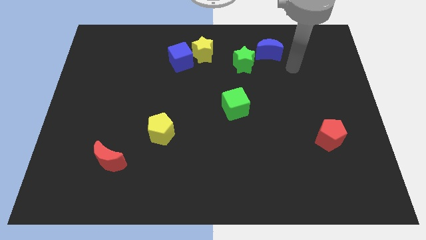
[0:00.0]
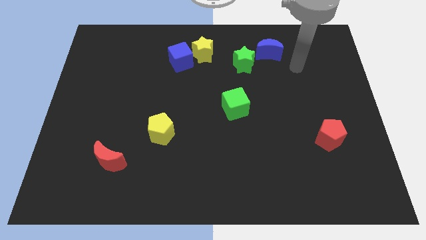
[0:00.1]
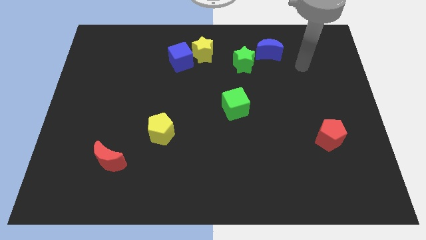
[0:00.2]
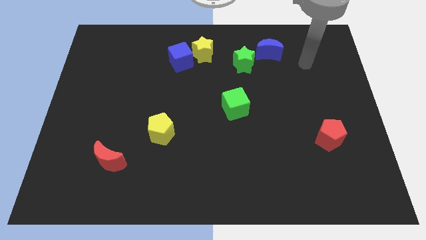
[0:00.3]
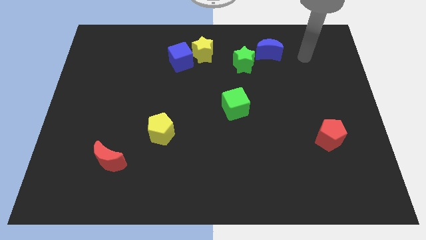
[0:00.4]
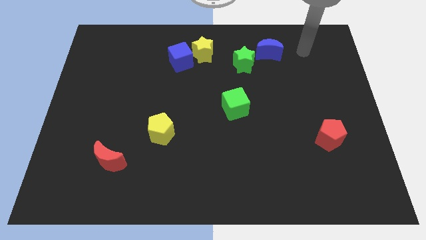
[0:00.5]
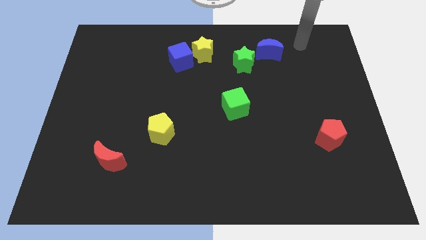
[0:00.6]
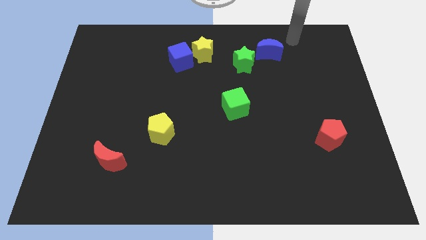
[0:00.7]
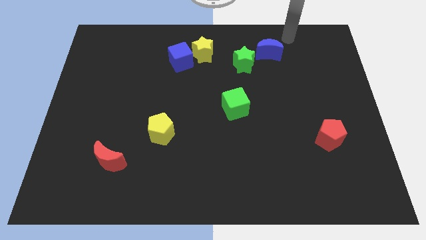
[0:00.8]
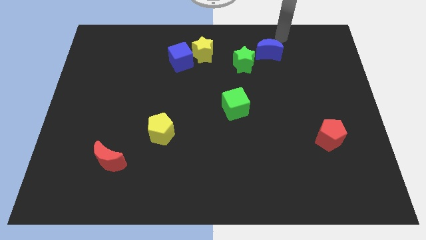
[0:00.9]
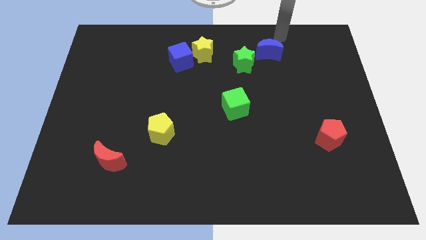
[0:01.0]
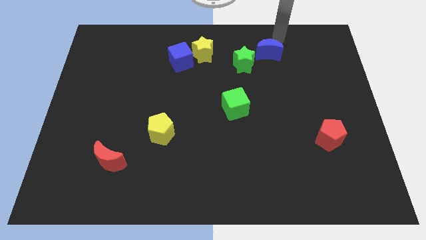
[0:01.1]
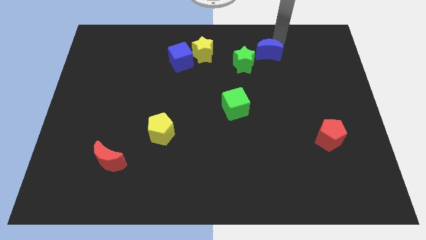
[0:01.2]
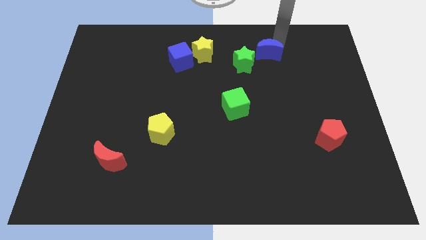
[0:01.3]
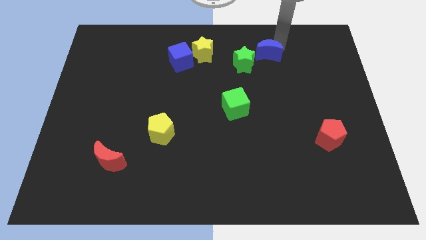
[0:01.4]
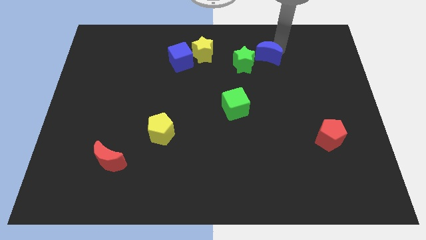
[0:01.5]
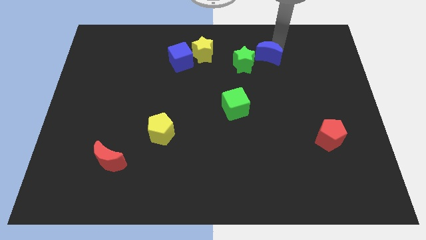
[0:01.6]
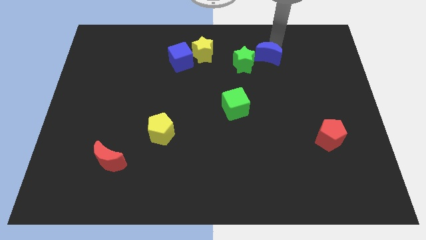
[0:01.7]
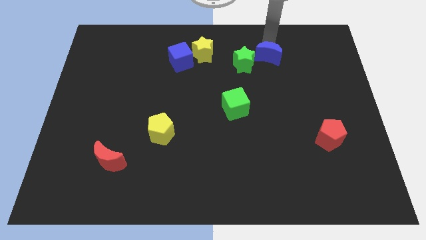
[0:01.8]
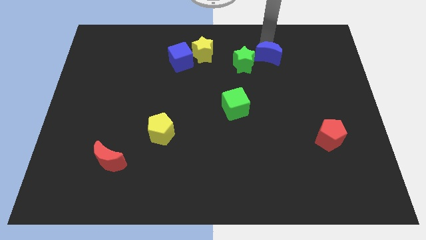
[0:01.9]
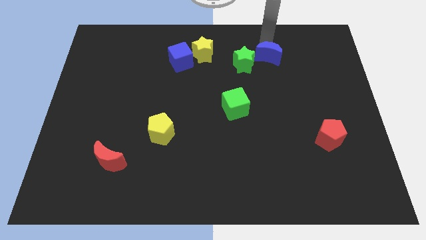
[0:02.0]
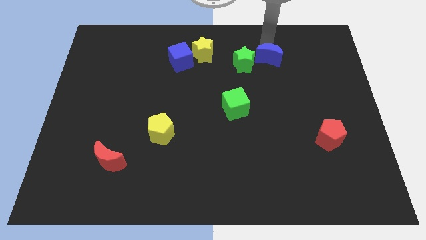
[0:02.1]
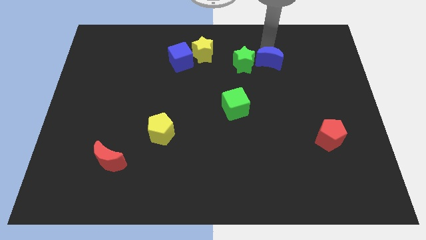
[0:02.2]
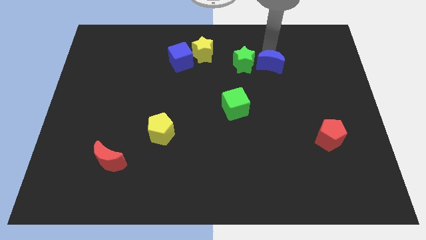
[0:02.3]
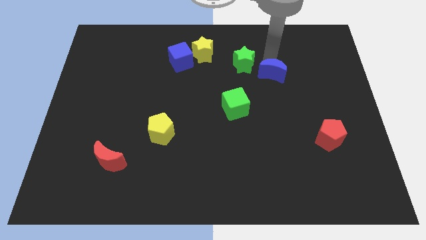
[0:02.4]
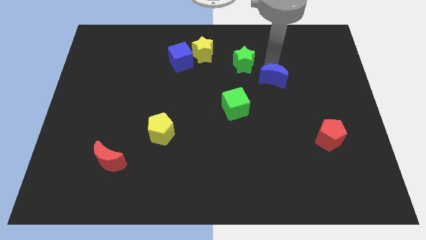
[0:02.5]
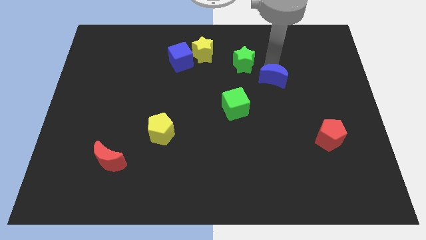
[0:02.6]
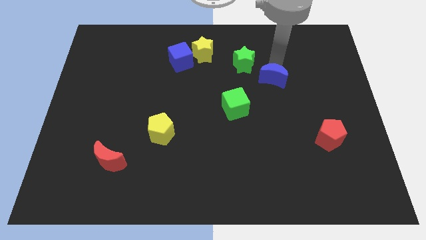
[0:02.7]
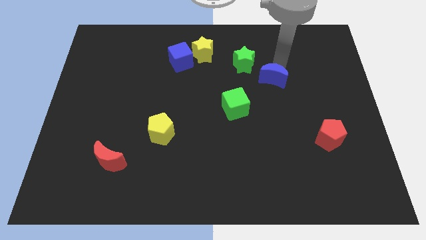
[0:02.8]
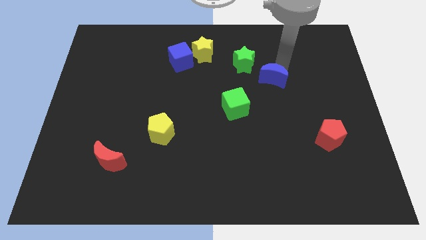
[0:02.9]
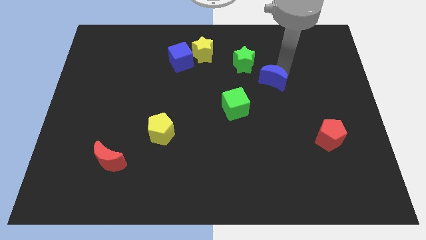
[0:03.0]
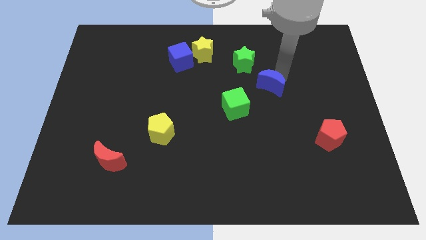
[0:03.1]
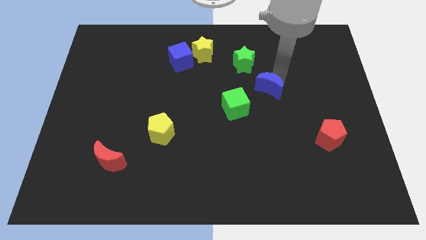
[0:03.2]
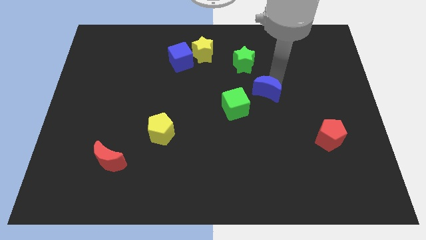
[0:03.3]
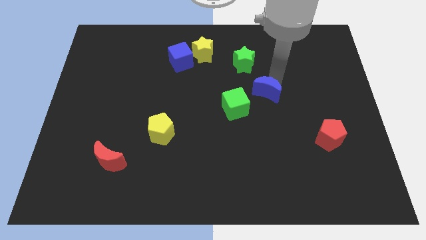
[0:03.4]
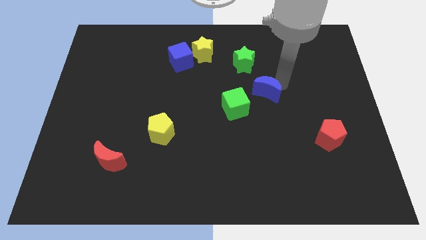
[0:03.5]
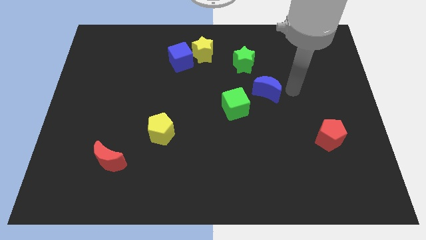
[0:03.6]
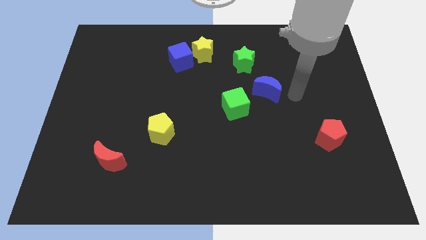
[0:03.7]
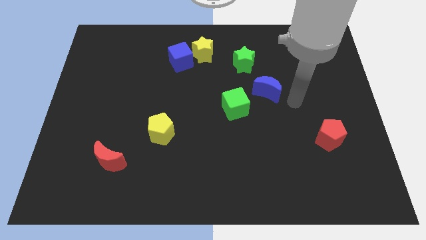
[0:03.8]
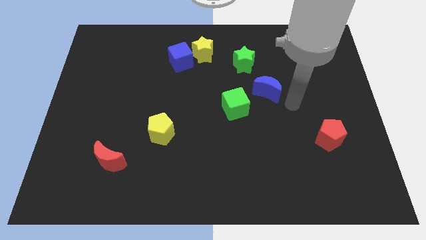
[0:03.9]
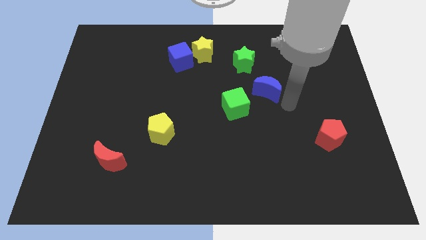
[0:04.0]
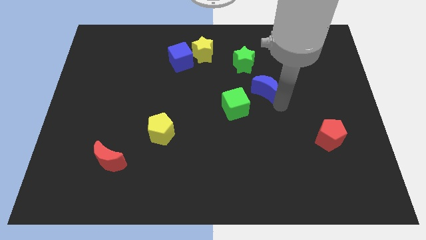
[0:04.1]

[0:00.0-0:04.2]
move the blue crescent to the bottom of the board

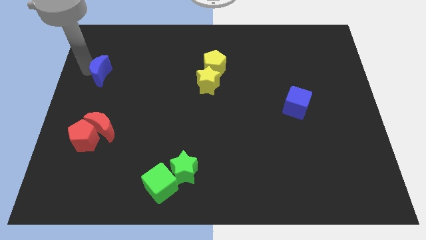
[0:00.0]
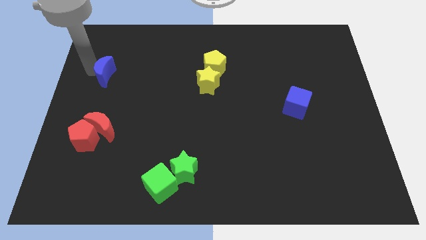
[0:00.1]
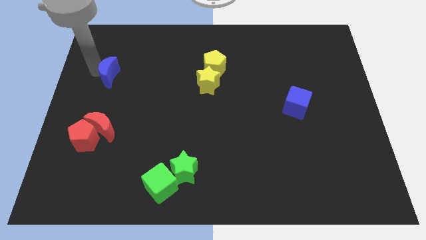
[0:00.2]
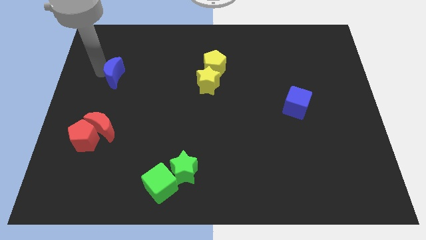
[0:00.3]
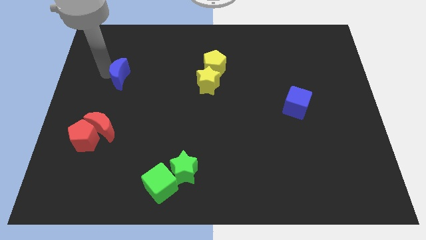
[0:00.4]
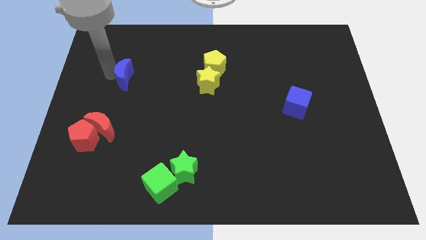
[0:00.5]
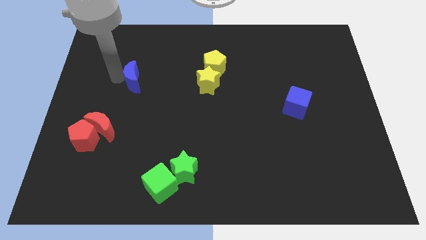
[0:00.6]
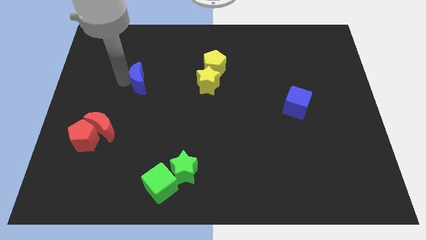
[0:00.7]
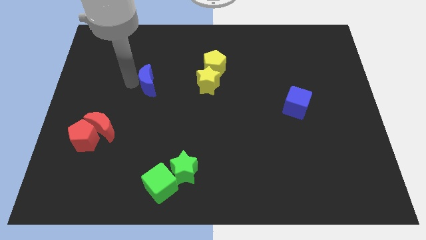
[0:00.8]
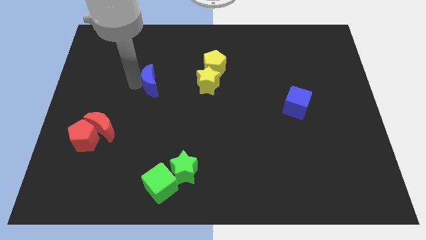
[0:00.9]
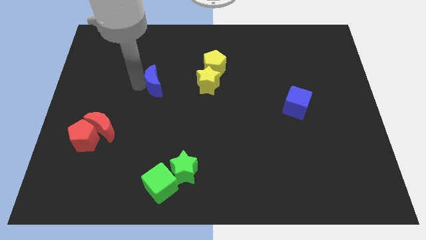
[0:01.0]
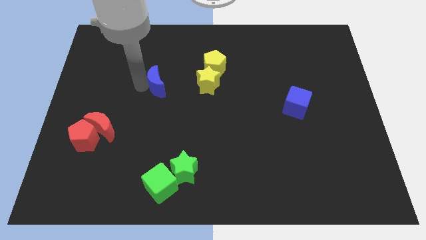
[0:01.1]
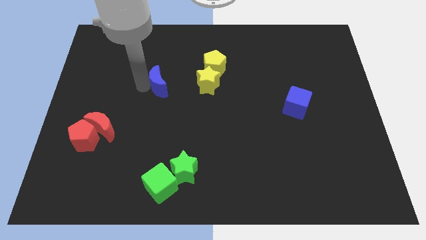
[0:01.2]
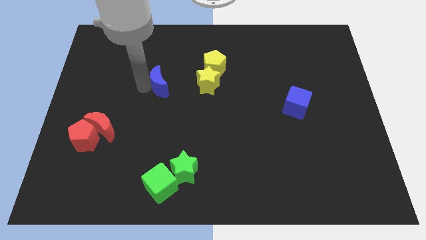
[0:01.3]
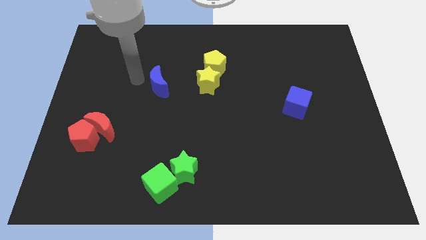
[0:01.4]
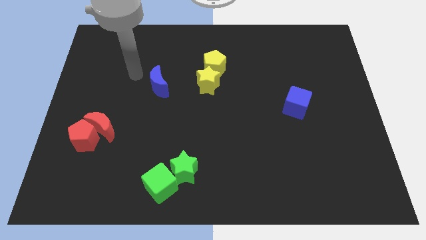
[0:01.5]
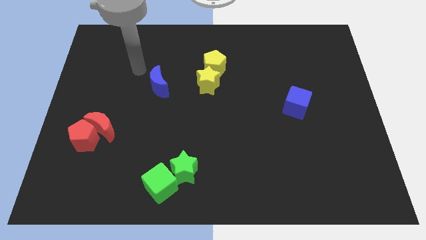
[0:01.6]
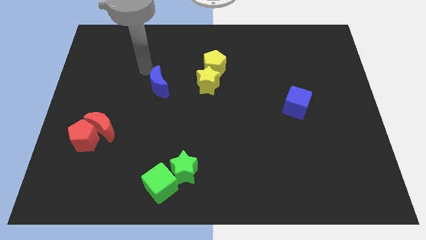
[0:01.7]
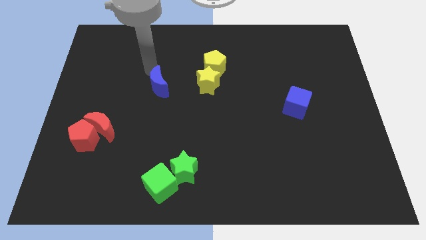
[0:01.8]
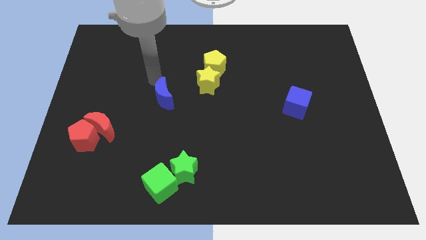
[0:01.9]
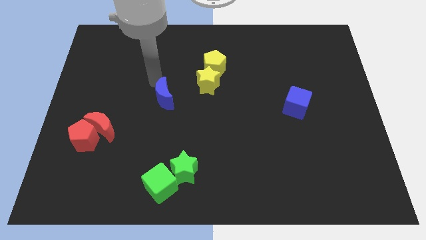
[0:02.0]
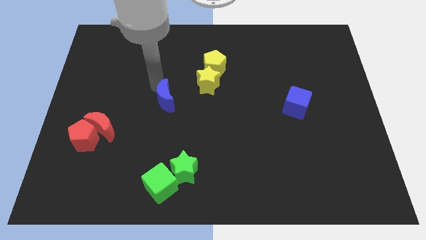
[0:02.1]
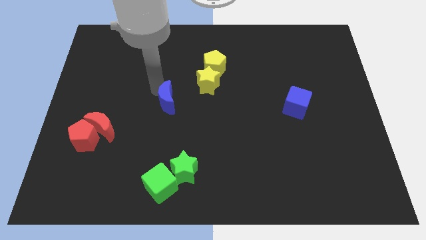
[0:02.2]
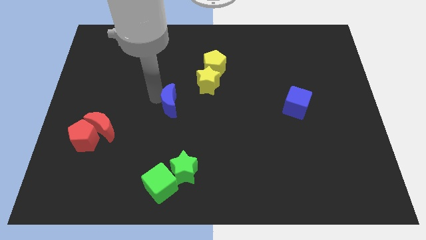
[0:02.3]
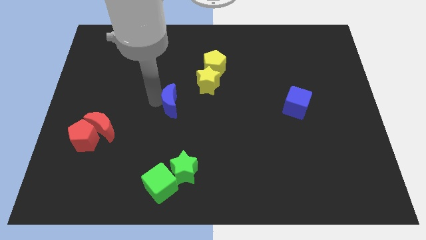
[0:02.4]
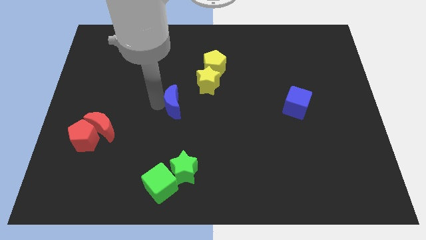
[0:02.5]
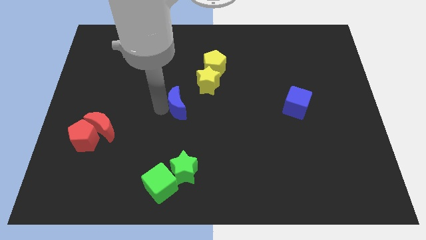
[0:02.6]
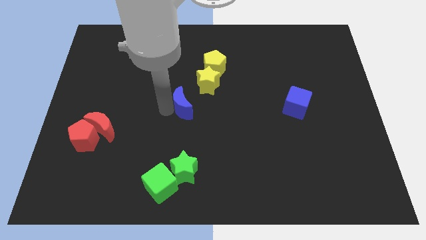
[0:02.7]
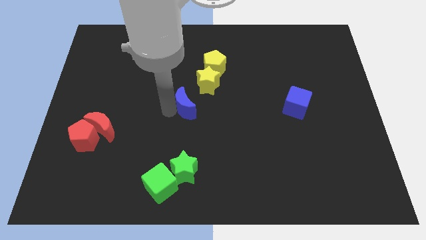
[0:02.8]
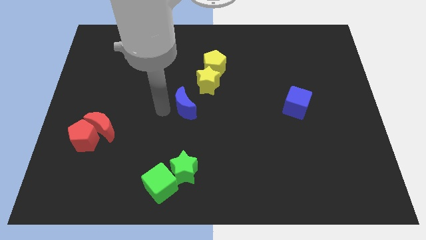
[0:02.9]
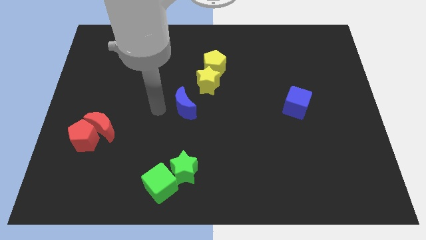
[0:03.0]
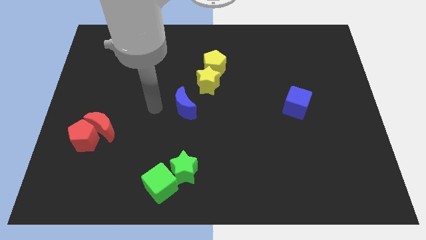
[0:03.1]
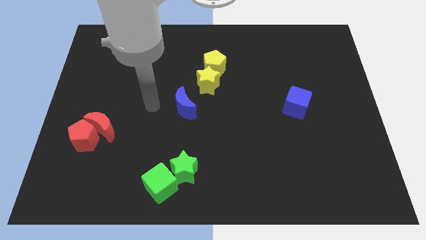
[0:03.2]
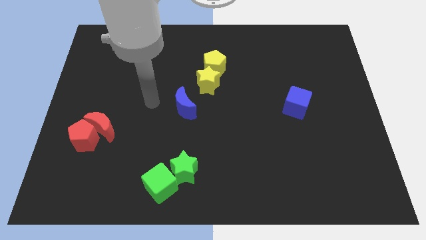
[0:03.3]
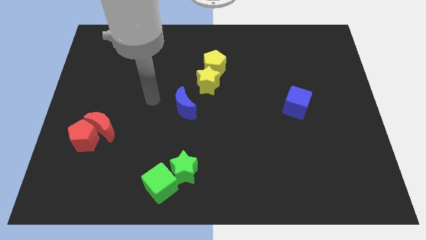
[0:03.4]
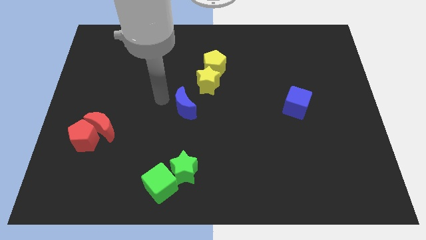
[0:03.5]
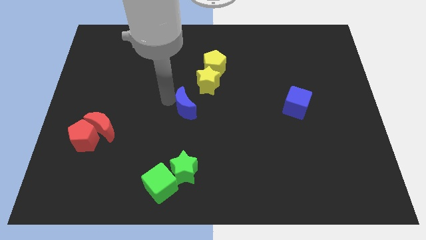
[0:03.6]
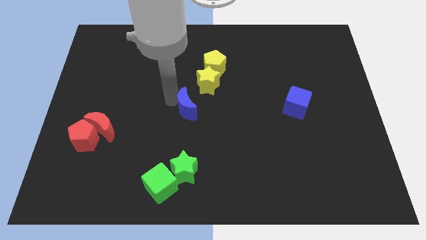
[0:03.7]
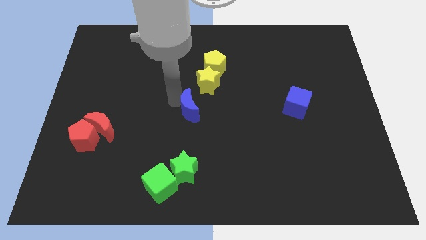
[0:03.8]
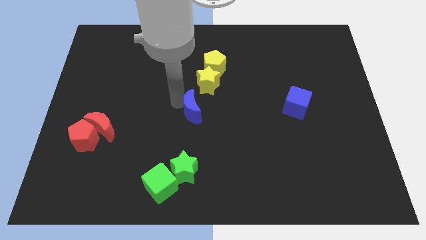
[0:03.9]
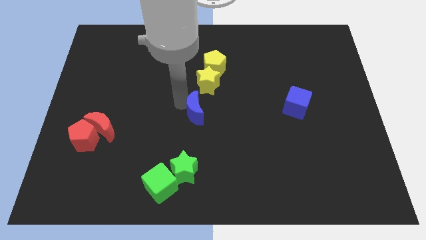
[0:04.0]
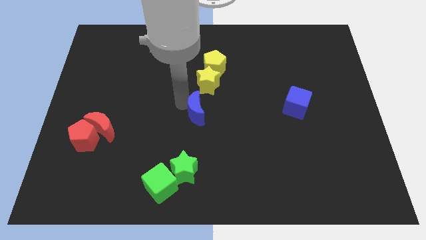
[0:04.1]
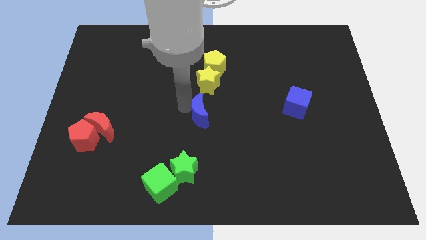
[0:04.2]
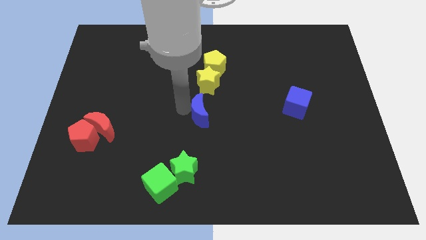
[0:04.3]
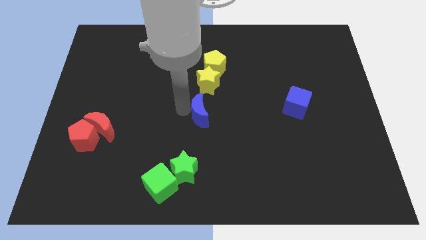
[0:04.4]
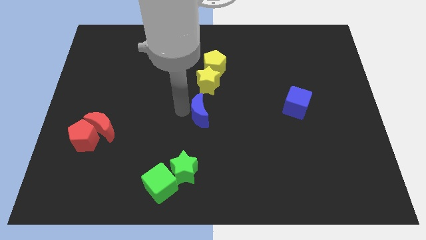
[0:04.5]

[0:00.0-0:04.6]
place the blue crescent at the top of the green blocks
